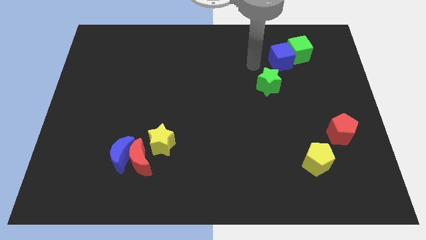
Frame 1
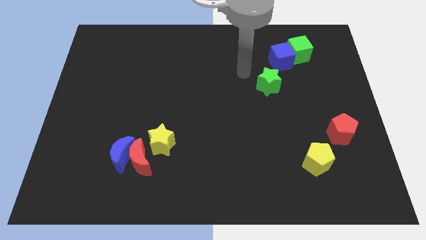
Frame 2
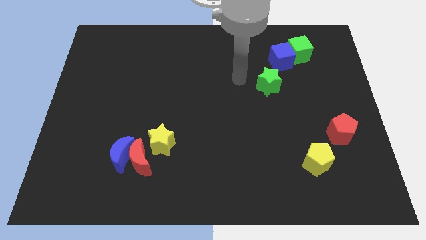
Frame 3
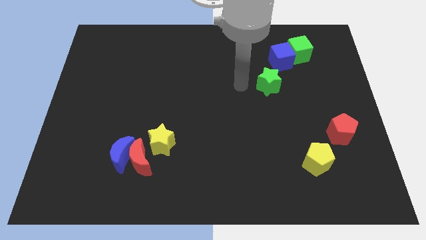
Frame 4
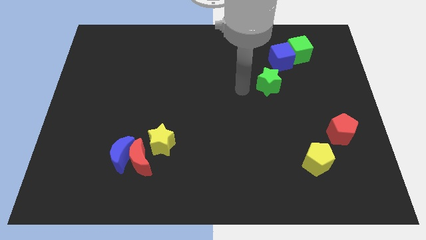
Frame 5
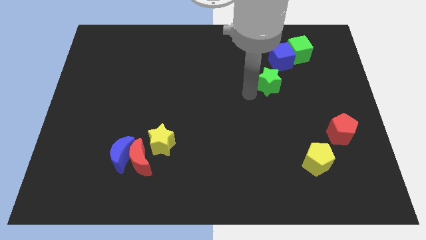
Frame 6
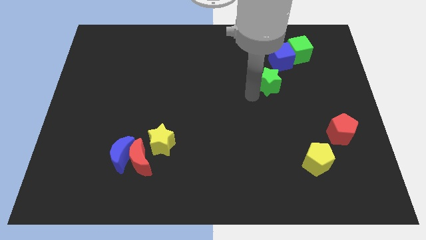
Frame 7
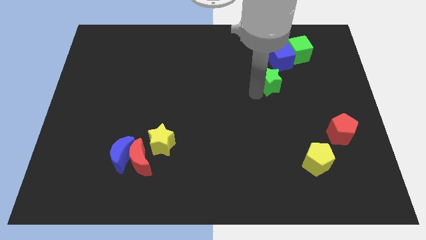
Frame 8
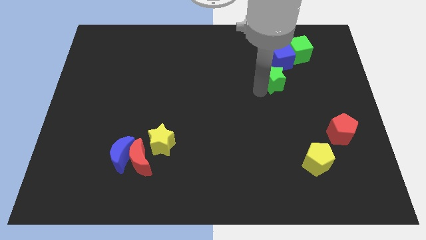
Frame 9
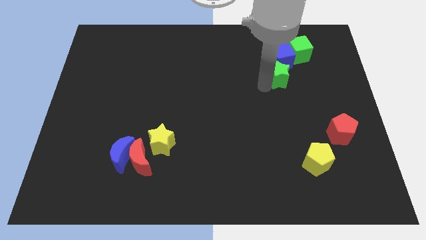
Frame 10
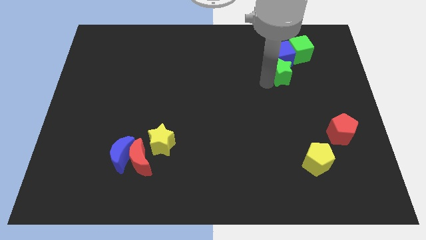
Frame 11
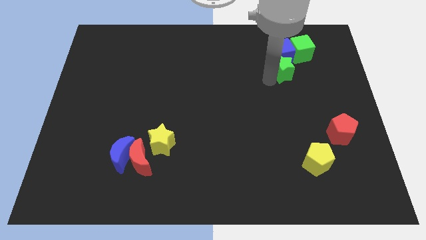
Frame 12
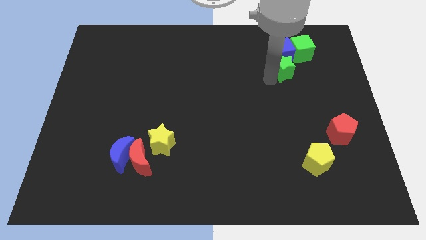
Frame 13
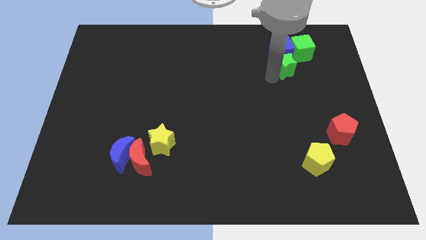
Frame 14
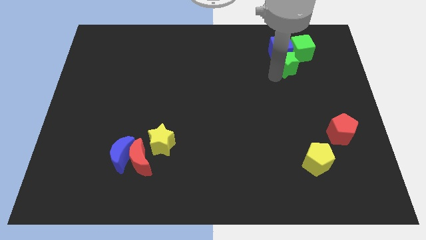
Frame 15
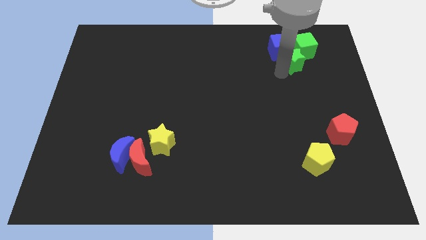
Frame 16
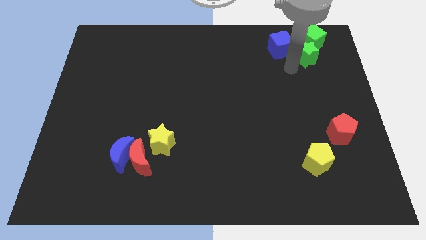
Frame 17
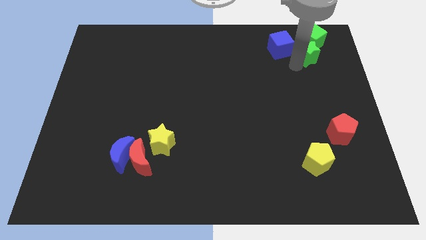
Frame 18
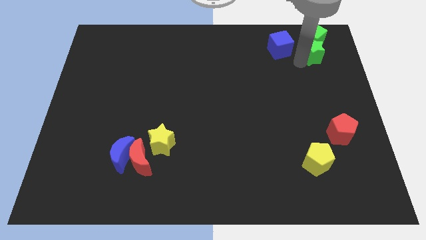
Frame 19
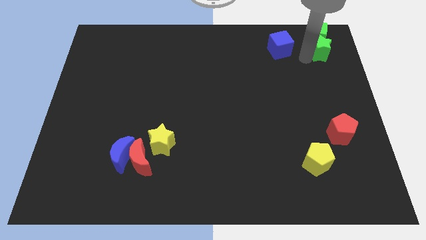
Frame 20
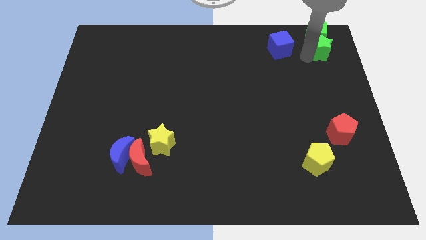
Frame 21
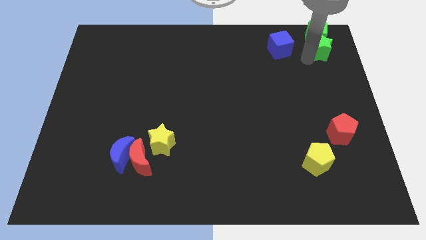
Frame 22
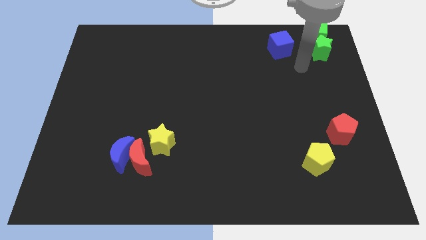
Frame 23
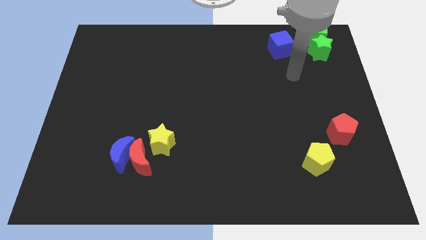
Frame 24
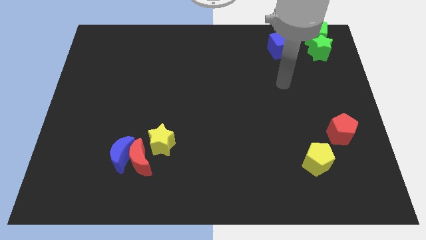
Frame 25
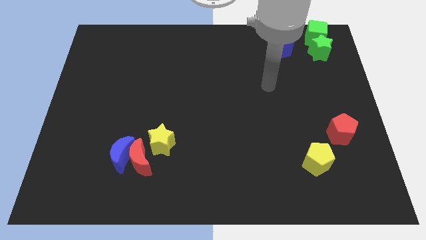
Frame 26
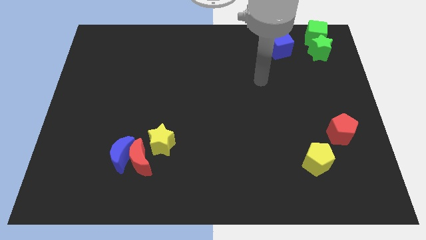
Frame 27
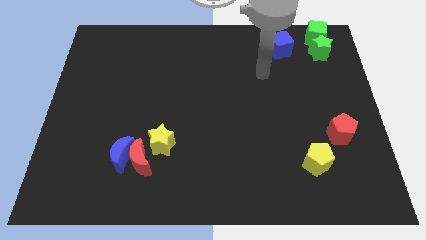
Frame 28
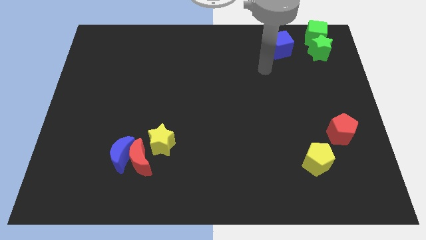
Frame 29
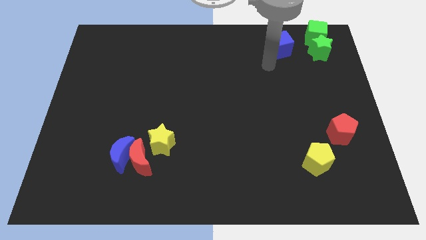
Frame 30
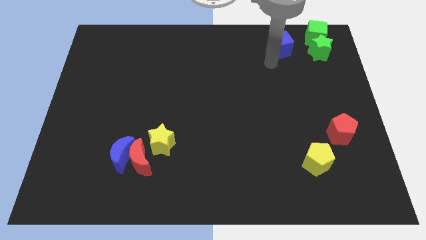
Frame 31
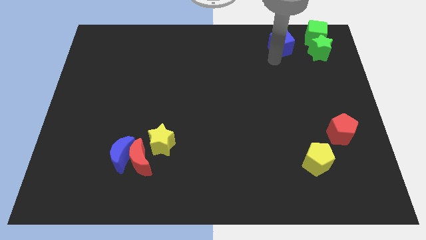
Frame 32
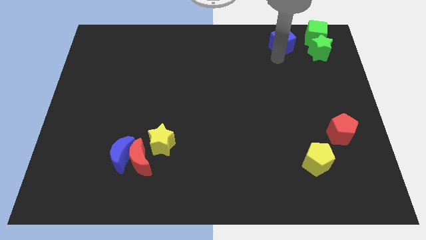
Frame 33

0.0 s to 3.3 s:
push the green star vertically at the bottom of the green cube

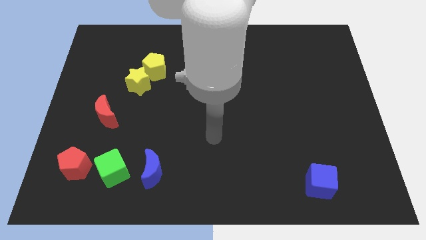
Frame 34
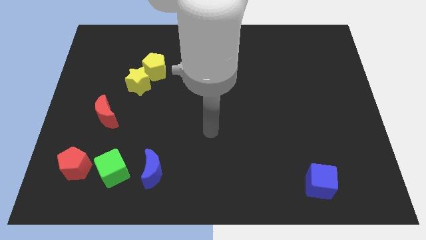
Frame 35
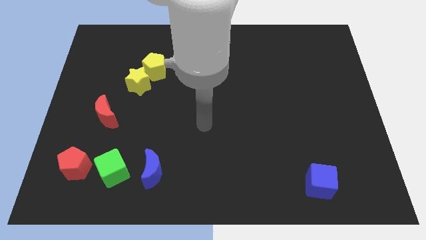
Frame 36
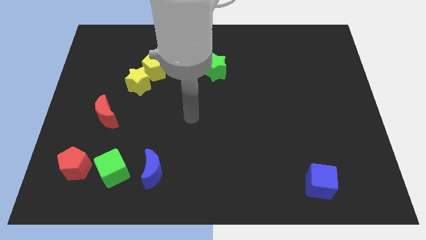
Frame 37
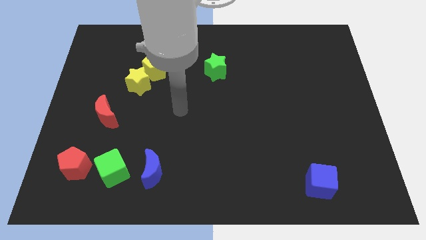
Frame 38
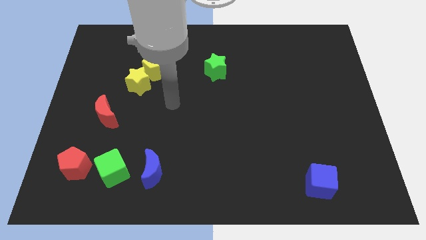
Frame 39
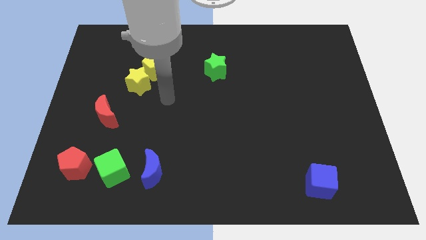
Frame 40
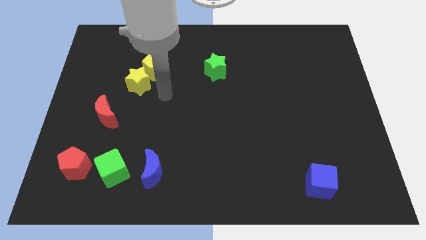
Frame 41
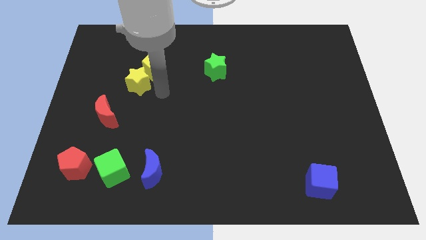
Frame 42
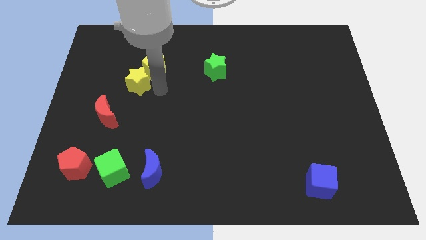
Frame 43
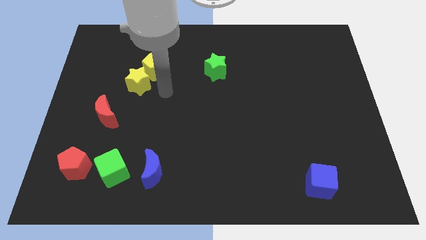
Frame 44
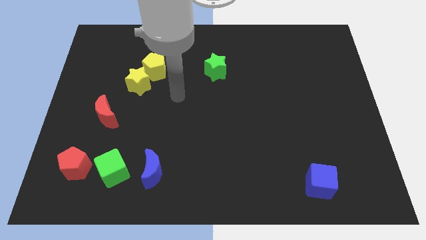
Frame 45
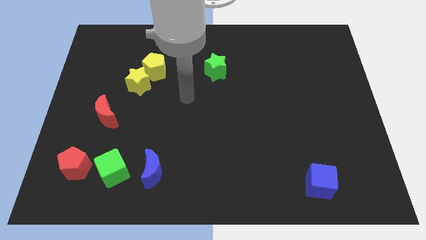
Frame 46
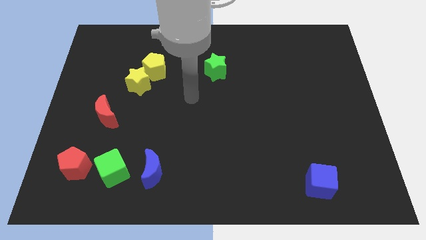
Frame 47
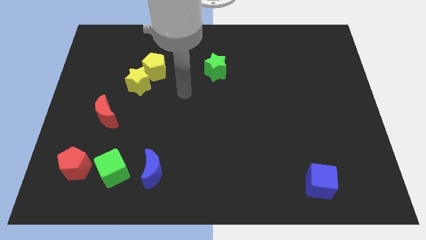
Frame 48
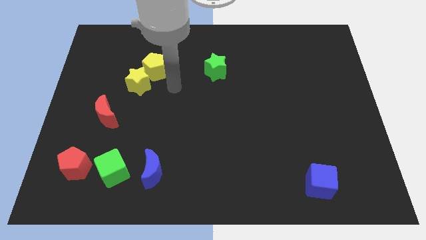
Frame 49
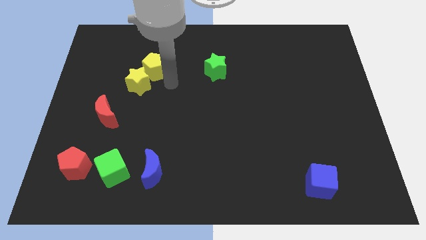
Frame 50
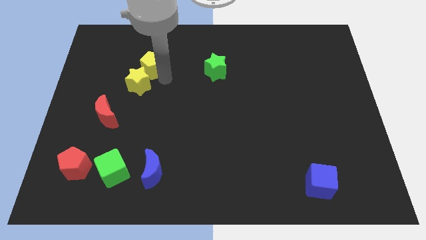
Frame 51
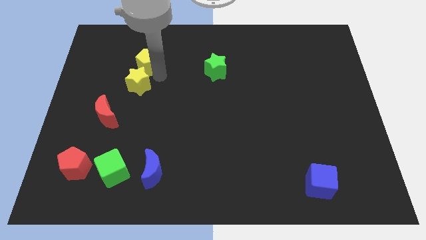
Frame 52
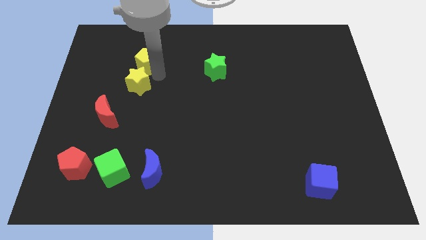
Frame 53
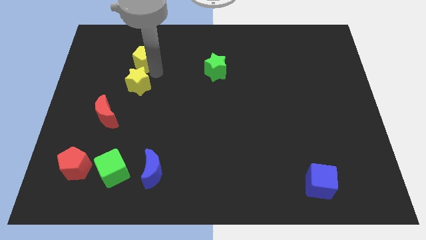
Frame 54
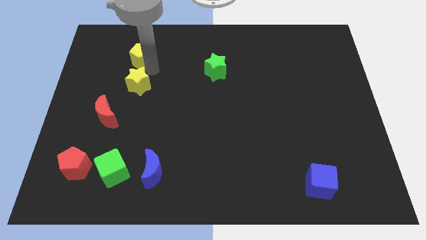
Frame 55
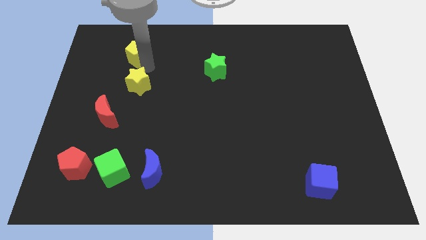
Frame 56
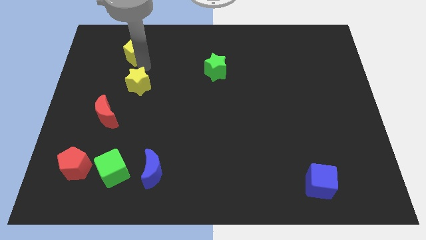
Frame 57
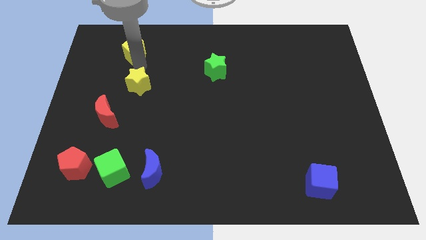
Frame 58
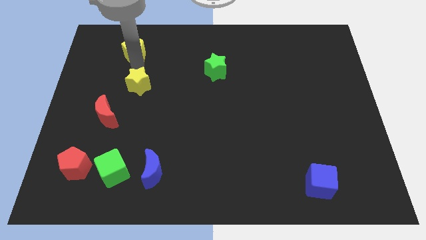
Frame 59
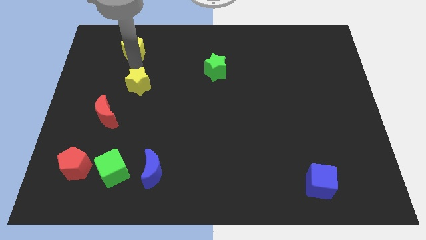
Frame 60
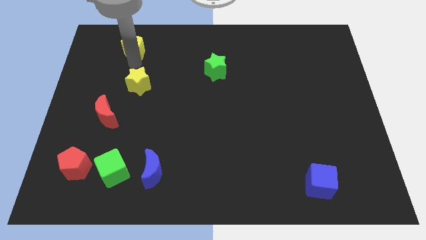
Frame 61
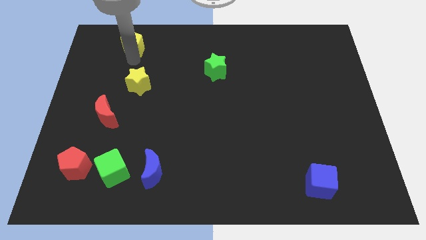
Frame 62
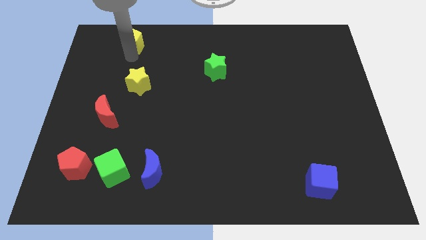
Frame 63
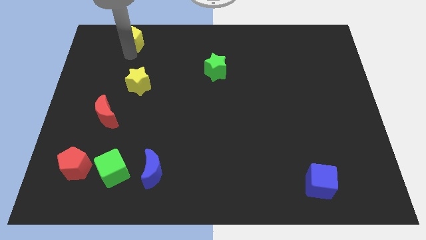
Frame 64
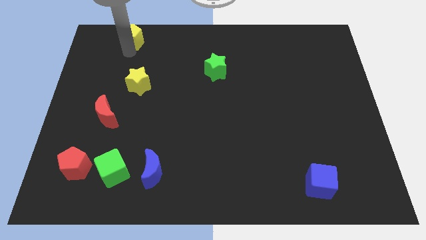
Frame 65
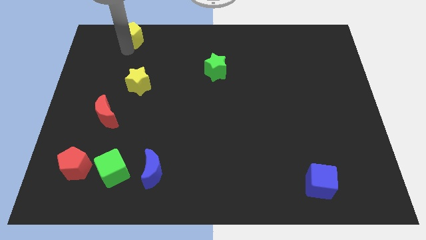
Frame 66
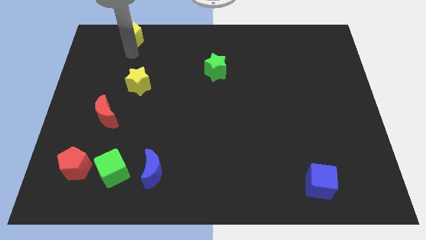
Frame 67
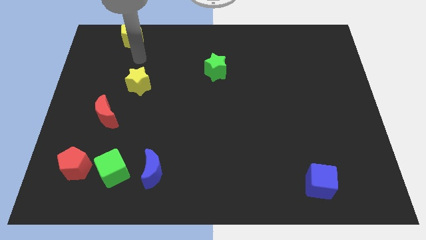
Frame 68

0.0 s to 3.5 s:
move yellow pentagon to the top

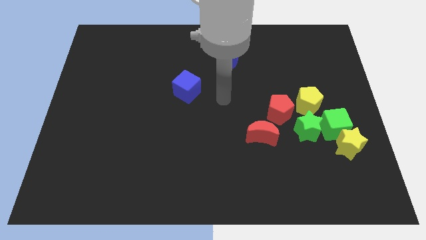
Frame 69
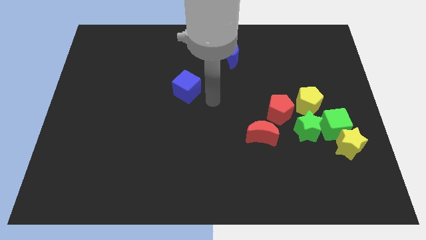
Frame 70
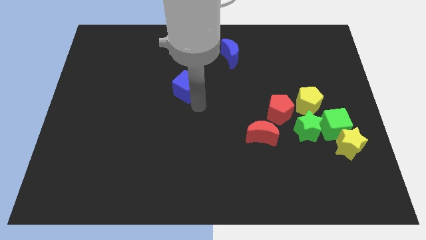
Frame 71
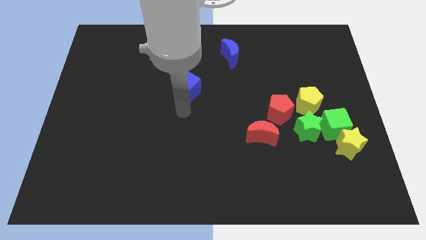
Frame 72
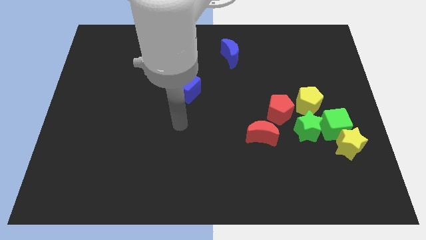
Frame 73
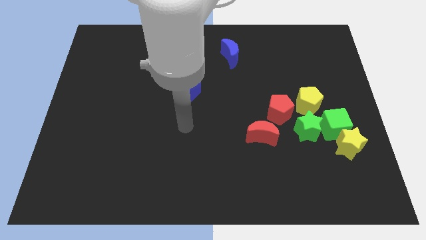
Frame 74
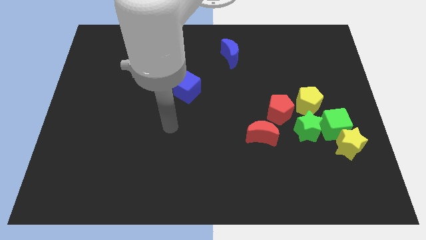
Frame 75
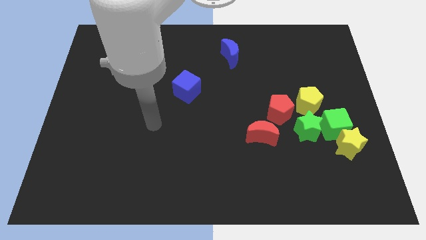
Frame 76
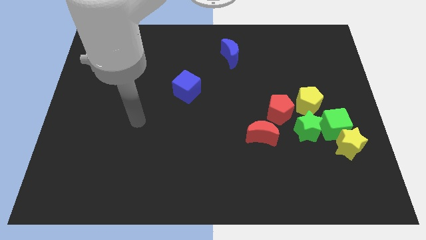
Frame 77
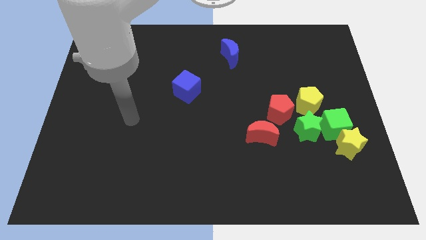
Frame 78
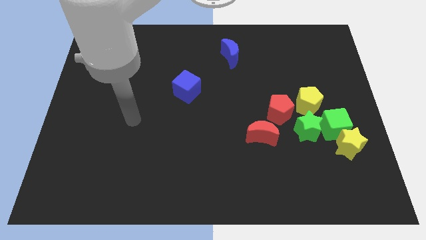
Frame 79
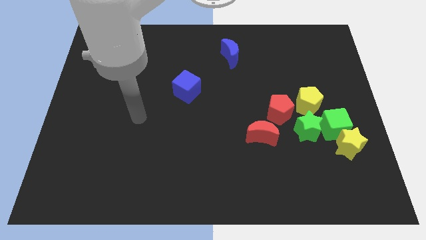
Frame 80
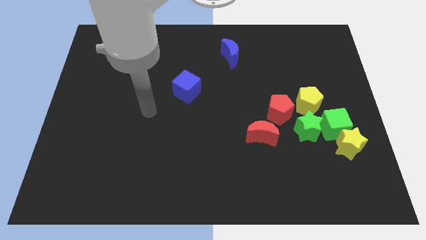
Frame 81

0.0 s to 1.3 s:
place your arm diagonal below the blue cube

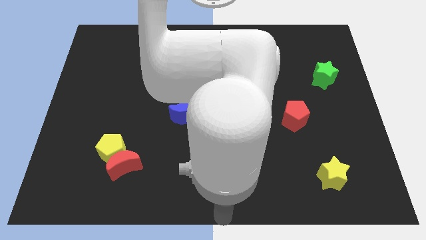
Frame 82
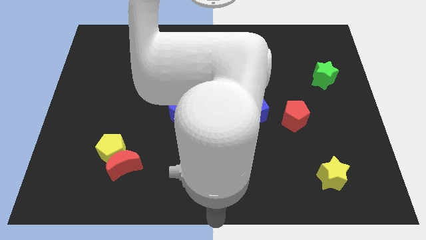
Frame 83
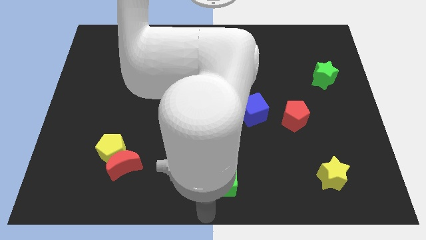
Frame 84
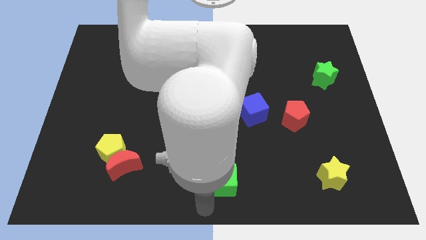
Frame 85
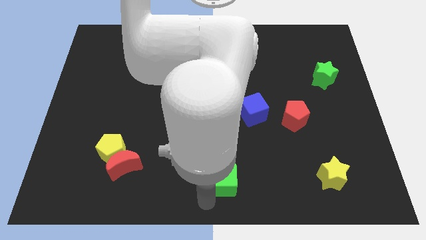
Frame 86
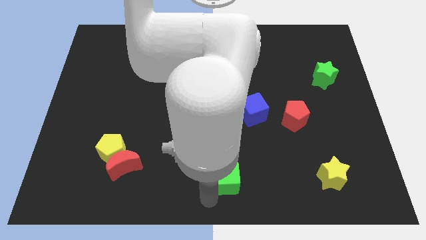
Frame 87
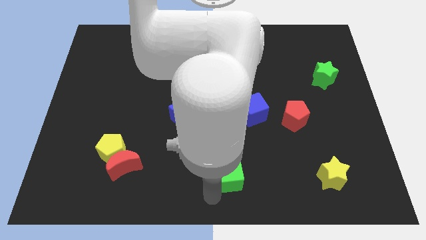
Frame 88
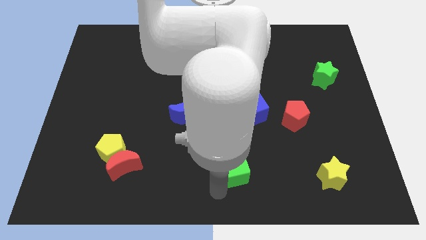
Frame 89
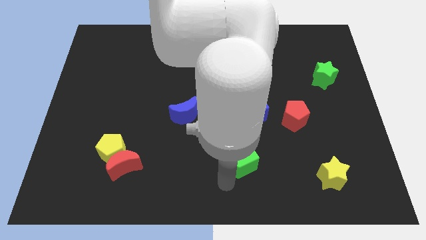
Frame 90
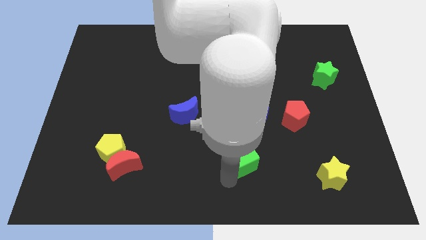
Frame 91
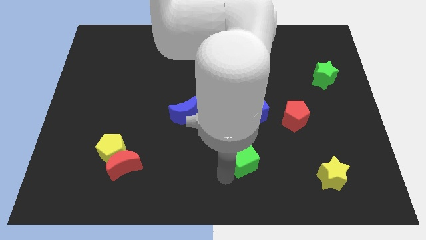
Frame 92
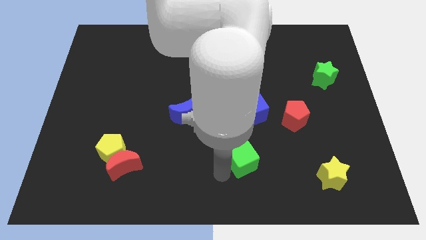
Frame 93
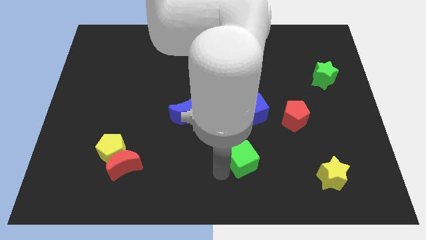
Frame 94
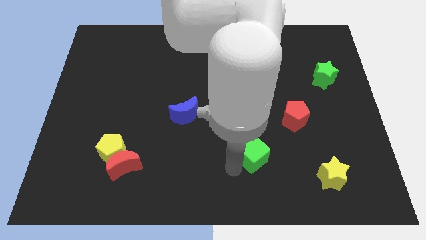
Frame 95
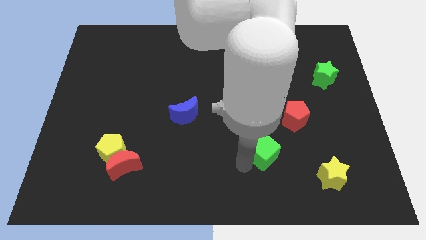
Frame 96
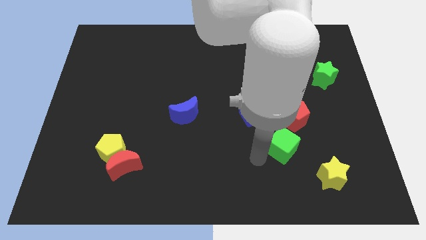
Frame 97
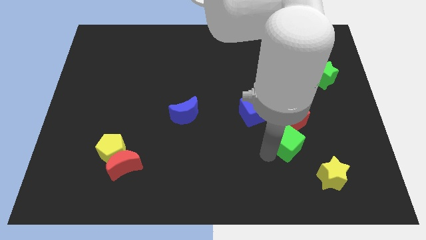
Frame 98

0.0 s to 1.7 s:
drag the green cube diagonally top left to the yellow star
